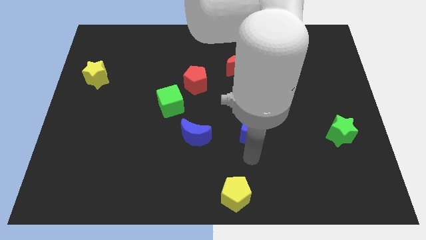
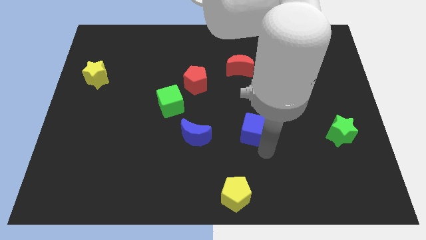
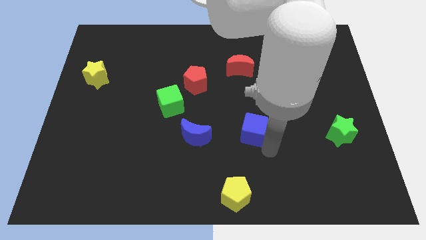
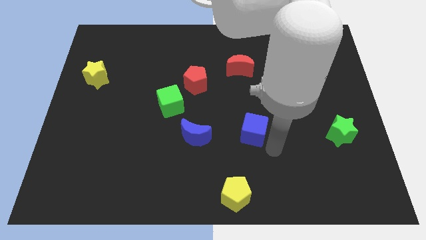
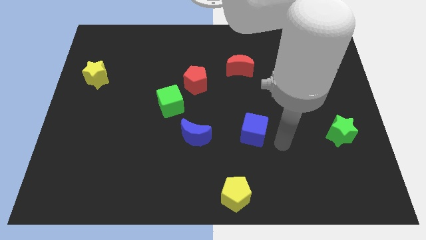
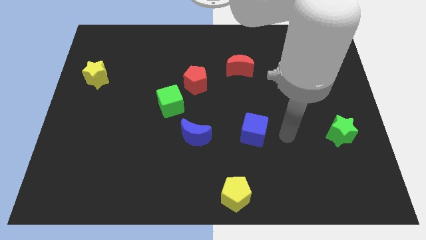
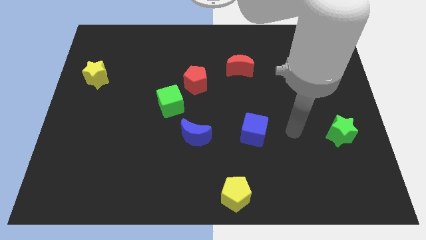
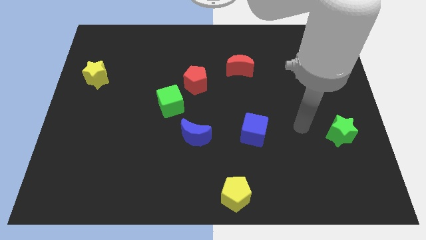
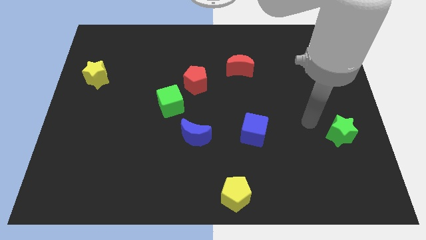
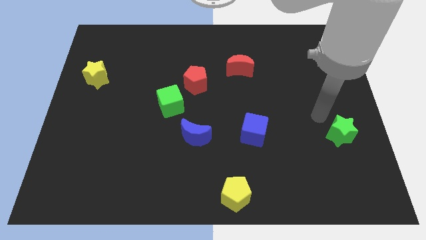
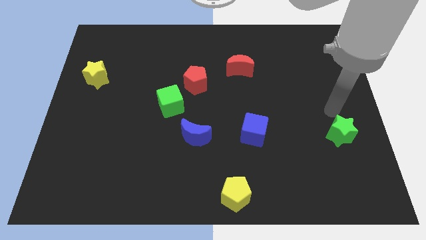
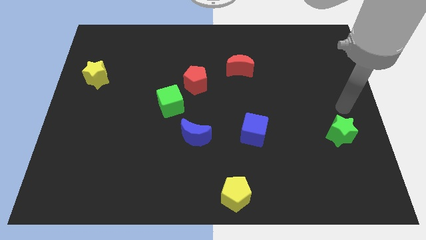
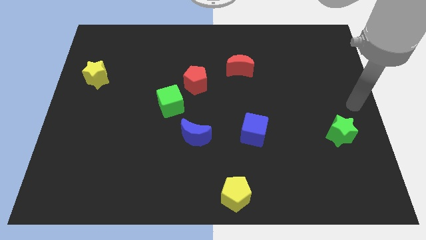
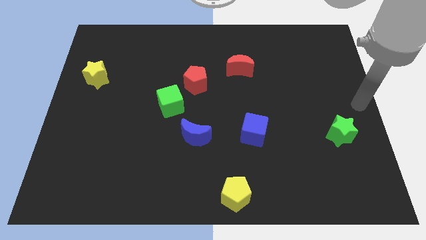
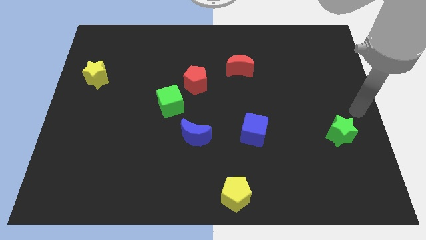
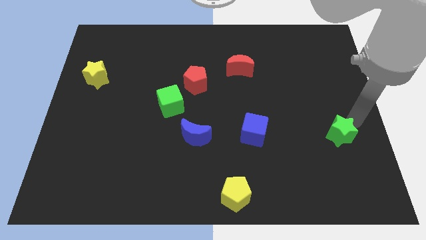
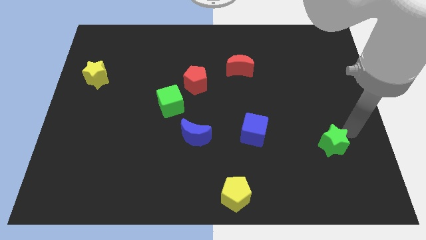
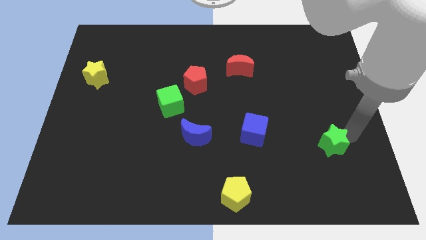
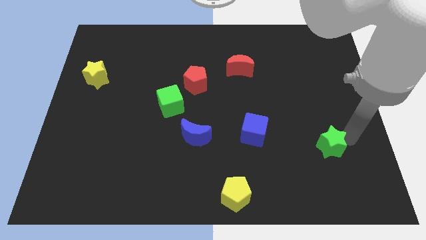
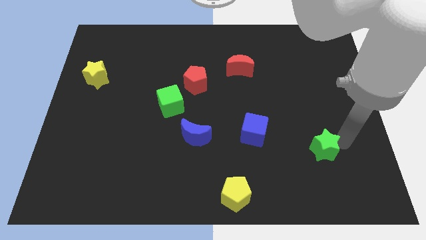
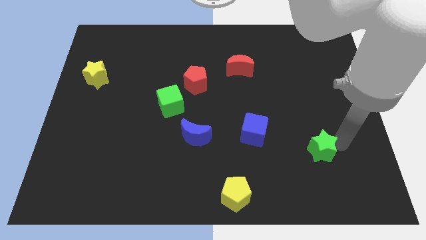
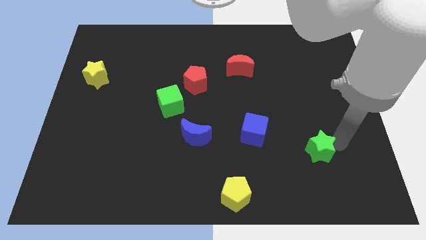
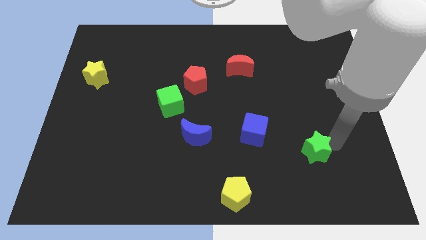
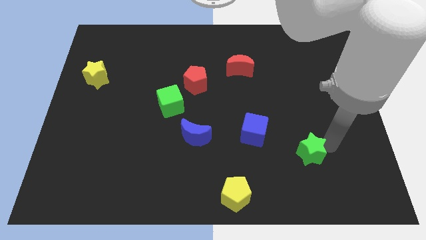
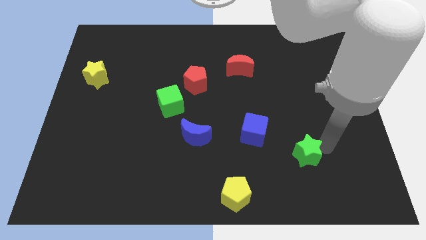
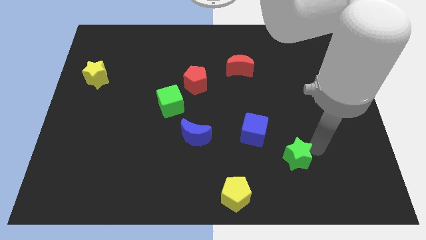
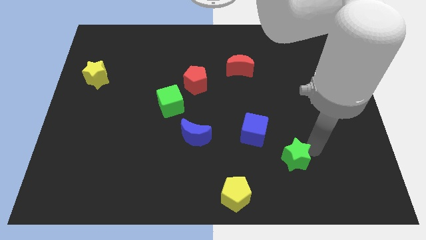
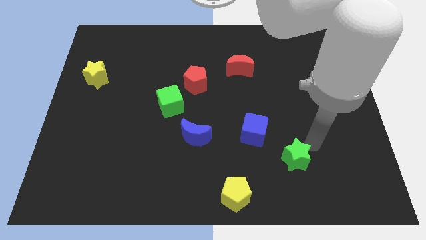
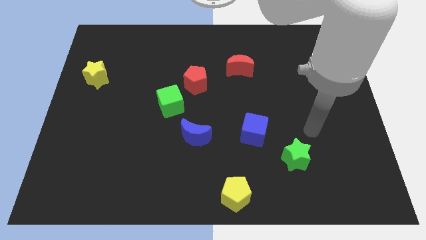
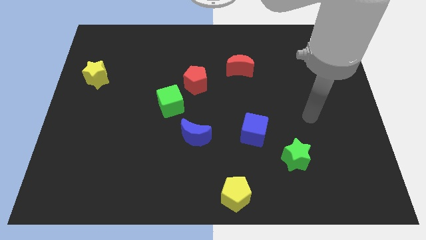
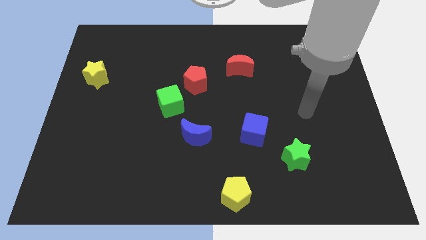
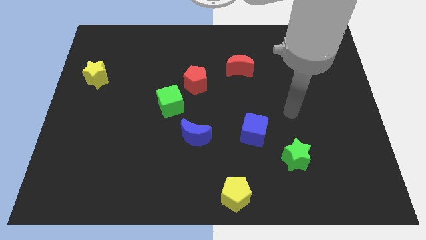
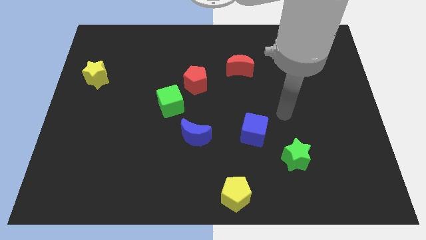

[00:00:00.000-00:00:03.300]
move the green star towards the bottom center of the board

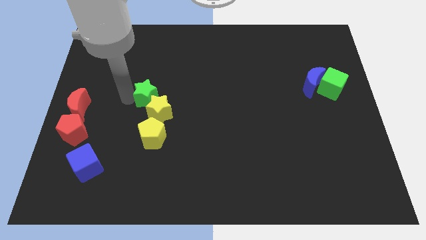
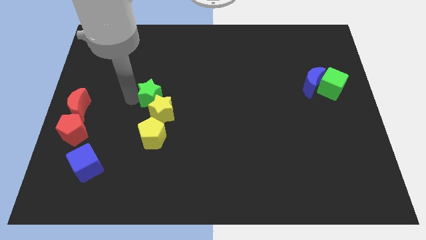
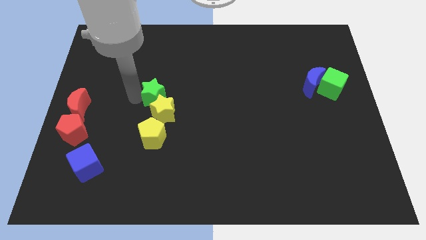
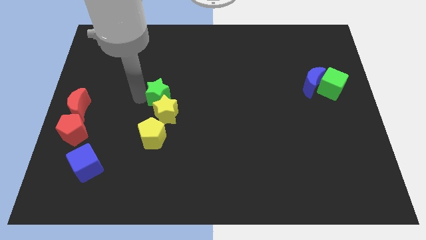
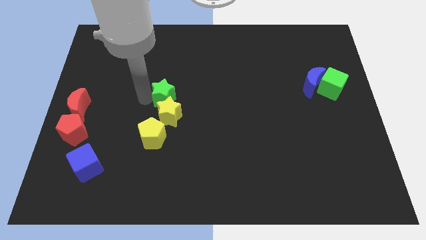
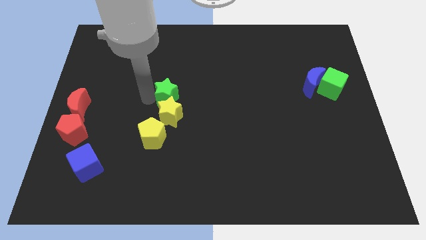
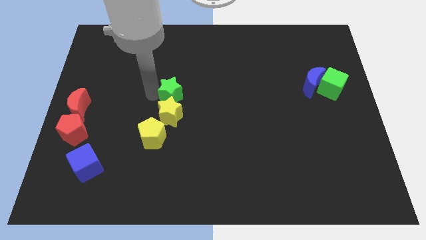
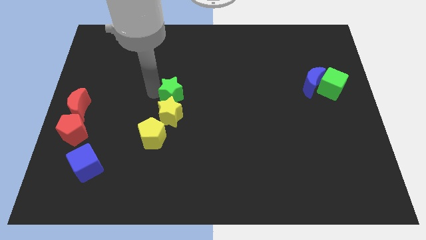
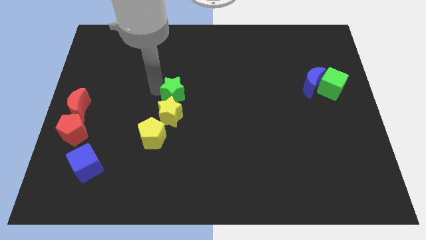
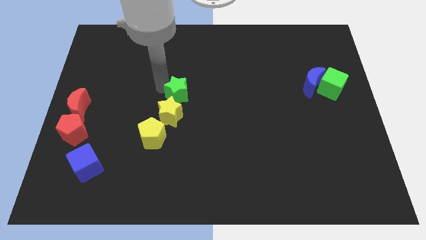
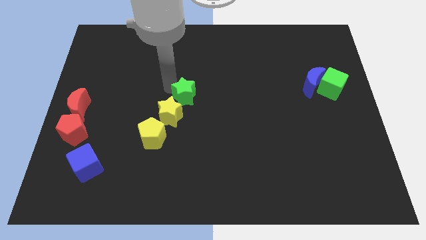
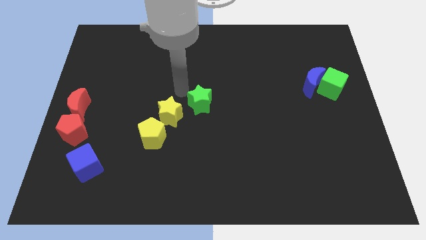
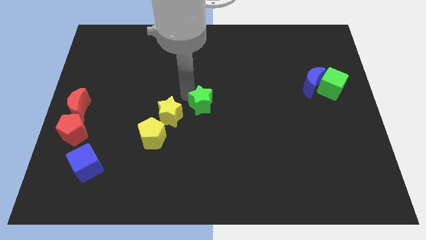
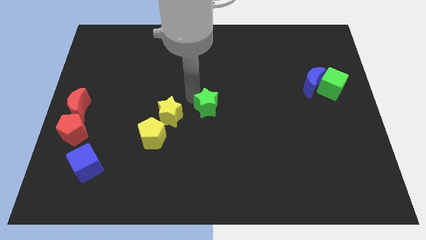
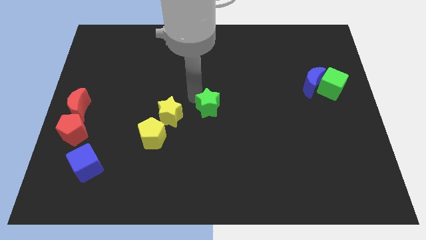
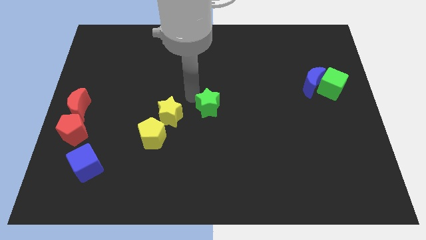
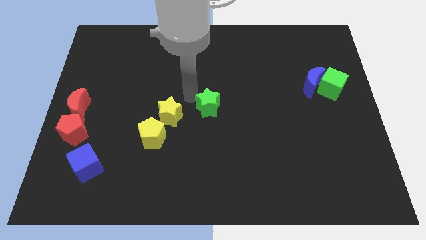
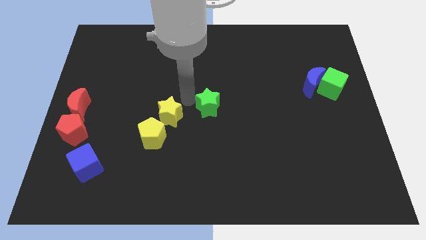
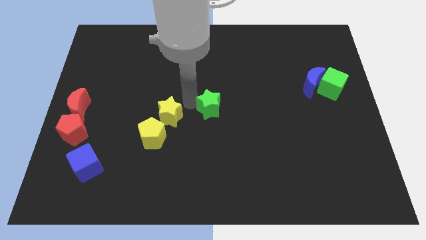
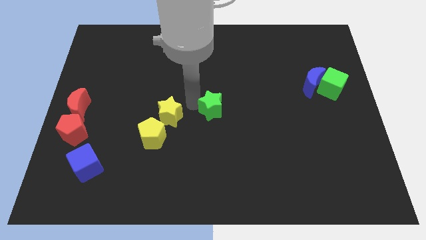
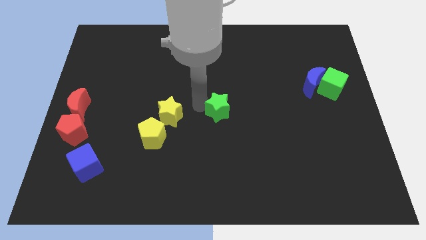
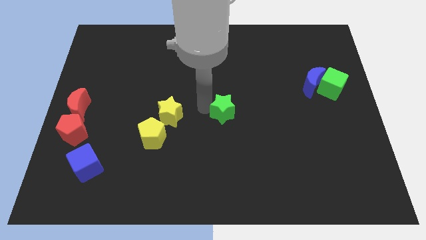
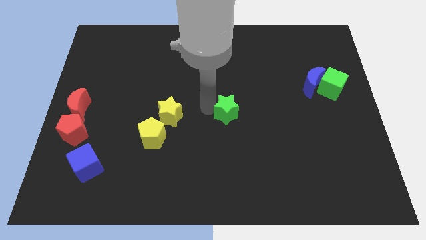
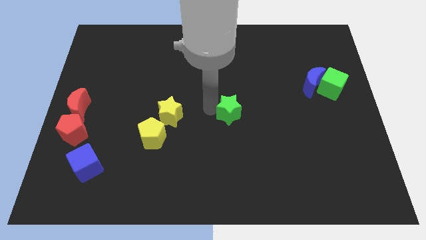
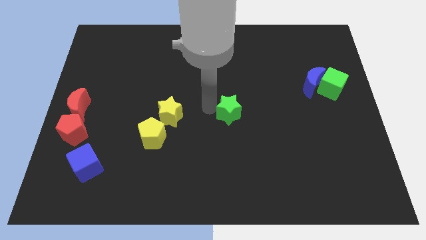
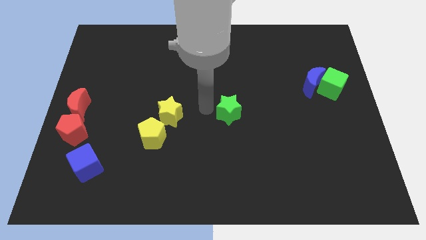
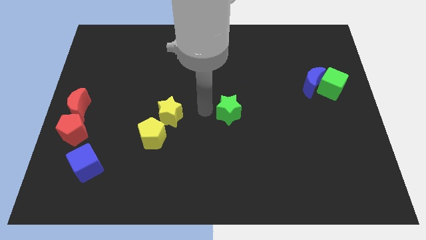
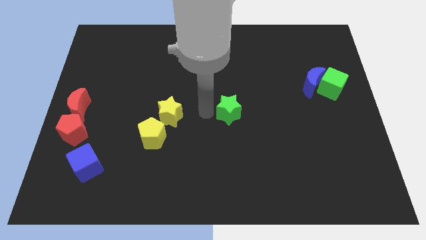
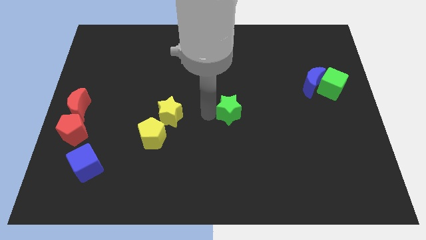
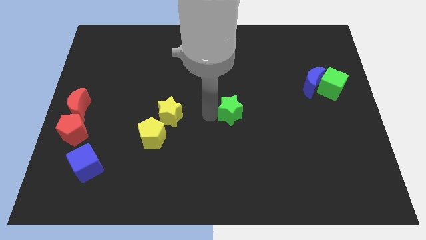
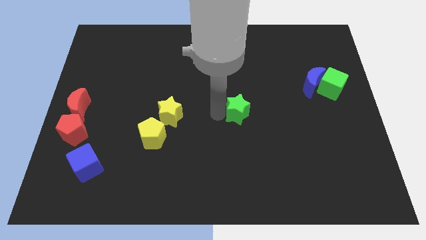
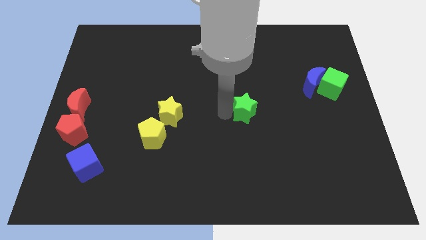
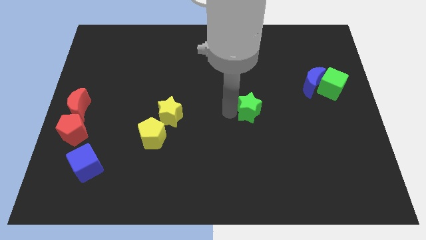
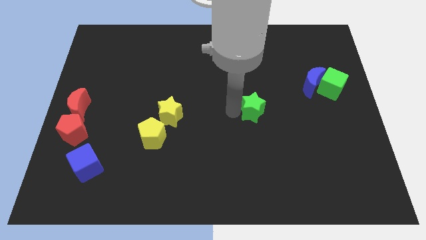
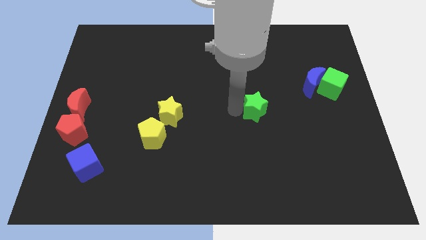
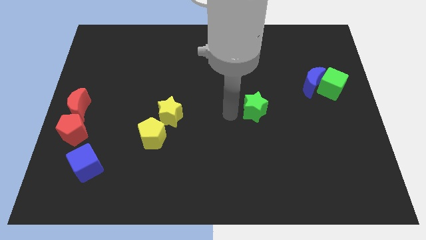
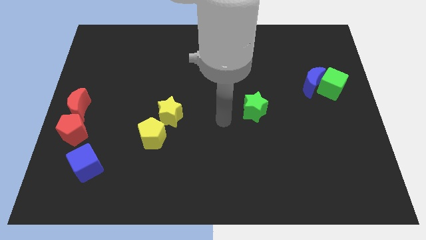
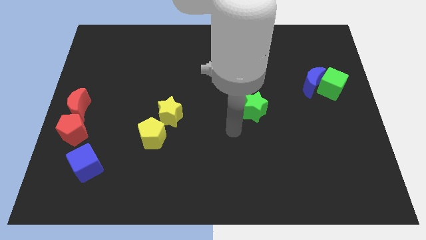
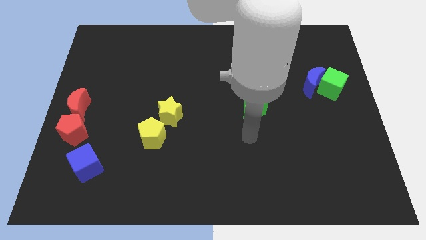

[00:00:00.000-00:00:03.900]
separate the green star from the yellow star

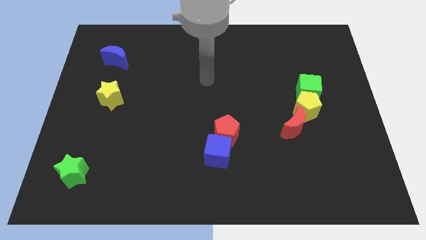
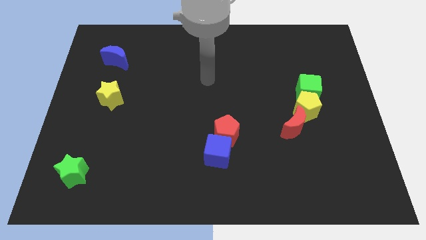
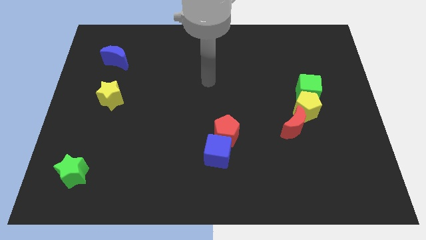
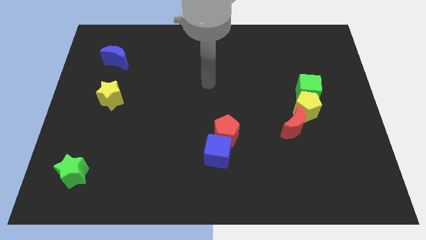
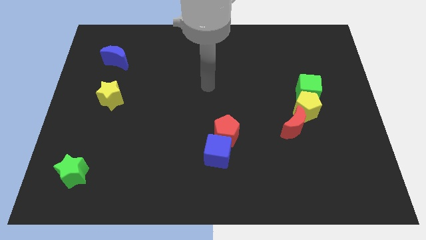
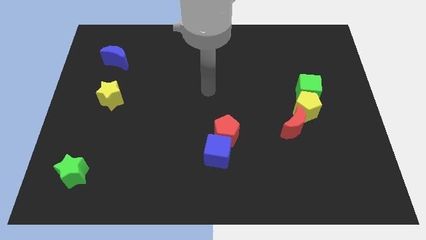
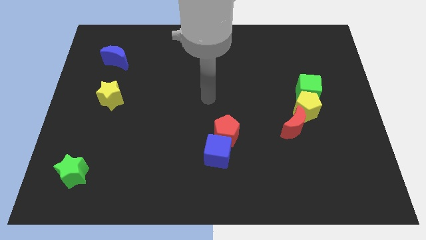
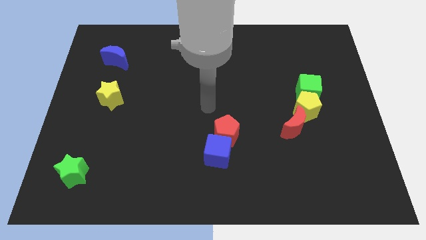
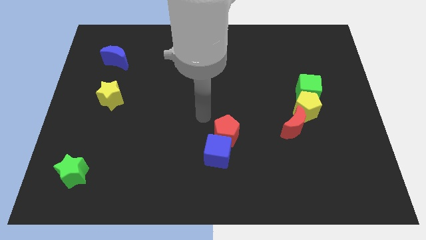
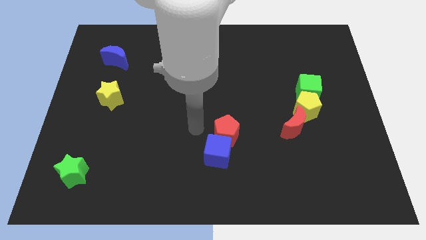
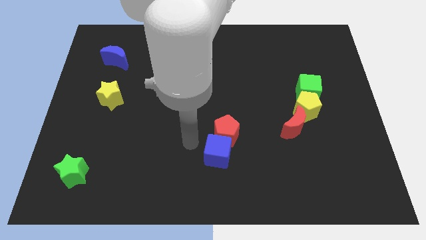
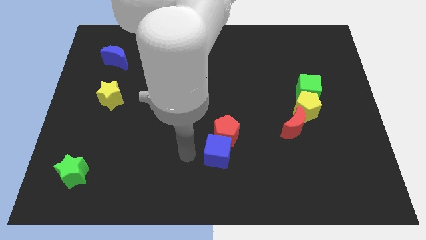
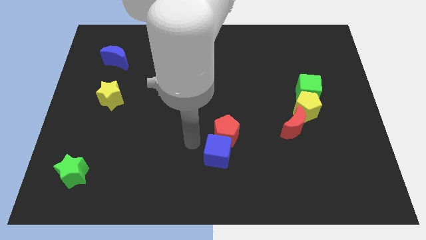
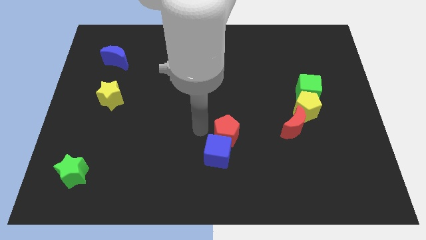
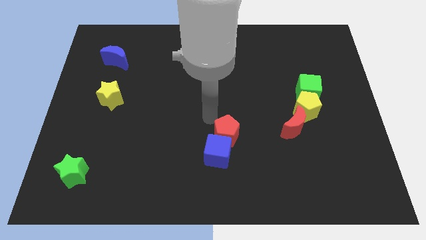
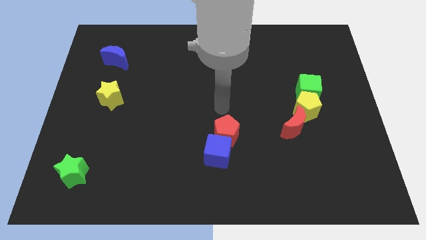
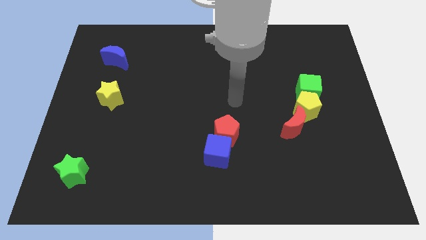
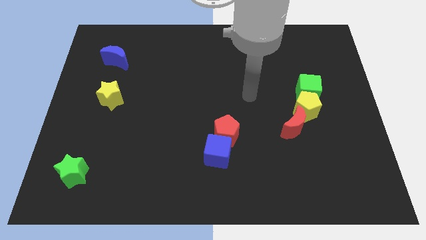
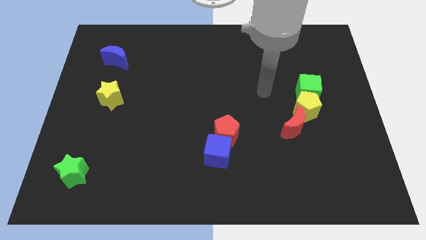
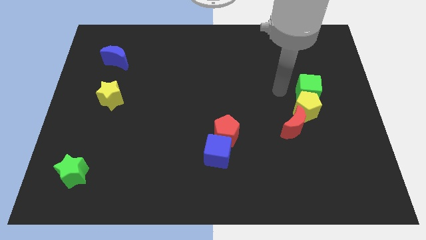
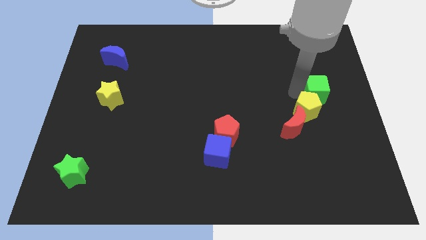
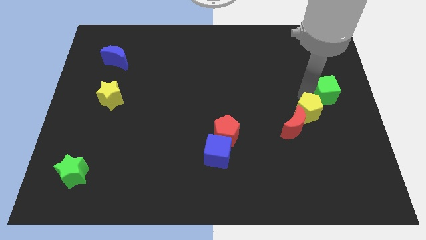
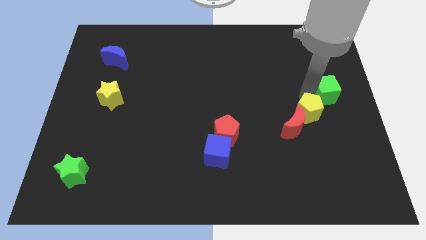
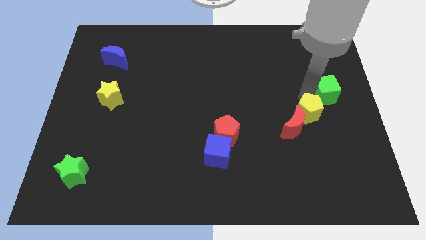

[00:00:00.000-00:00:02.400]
gently push both the green square and the yellow pentagon towards the right side
